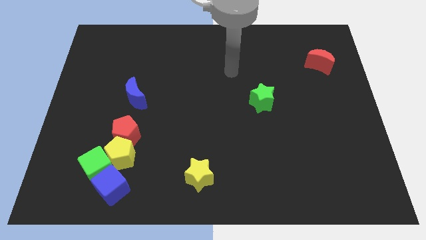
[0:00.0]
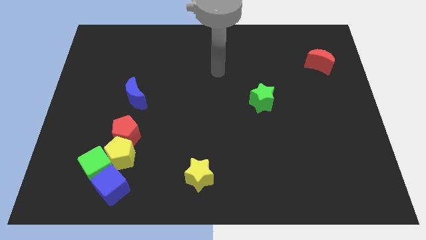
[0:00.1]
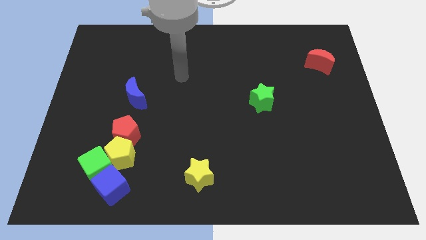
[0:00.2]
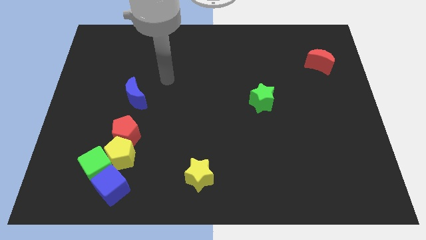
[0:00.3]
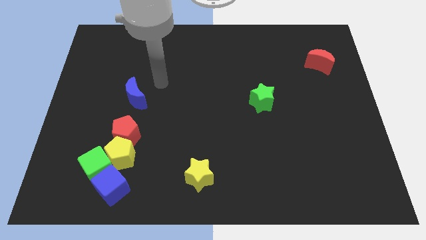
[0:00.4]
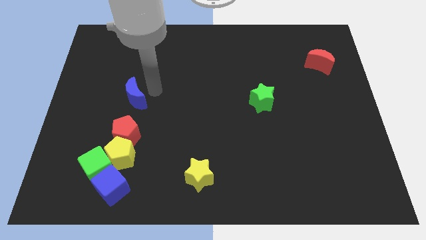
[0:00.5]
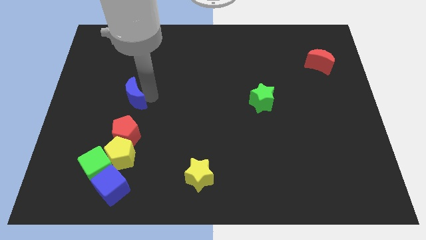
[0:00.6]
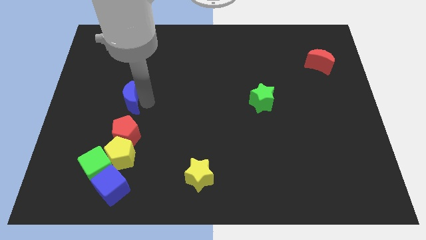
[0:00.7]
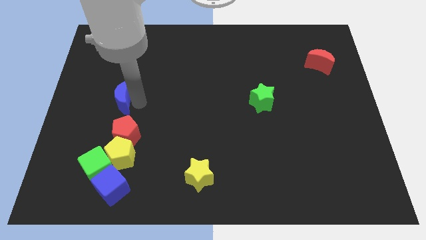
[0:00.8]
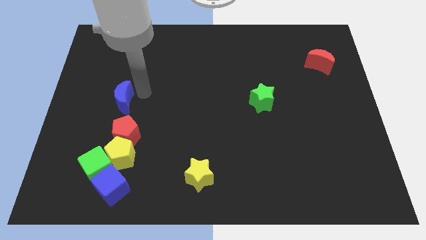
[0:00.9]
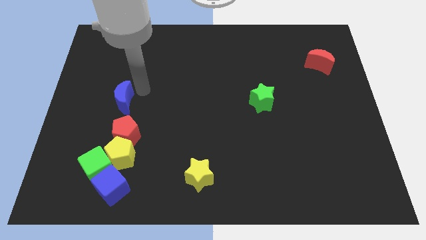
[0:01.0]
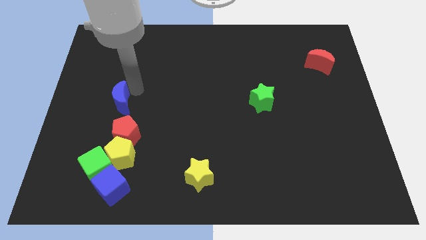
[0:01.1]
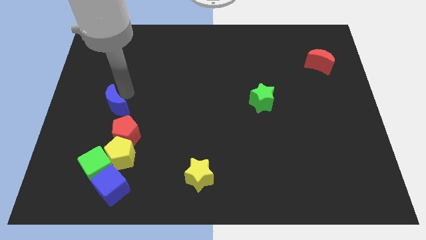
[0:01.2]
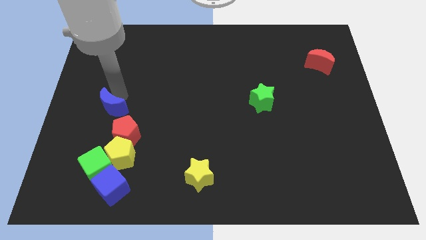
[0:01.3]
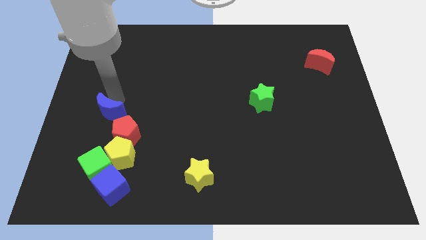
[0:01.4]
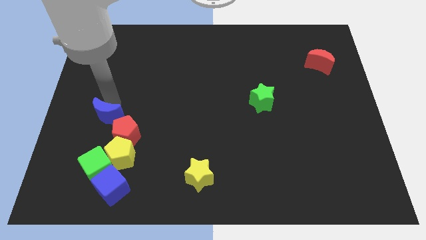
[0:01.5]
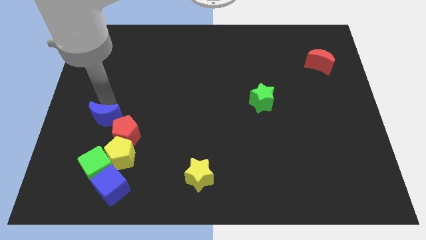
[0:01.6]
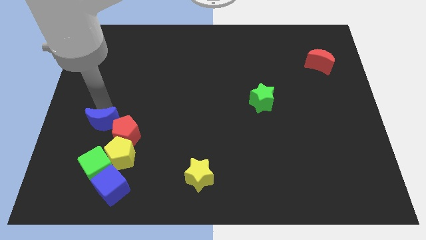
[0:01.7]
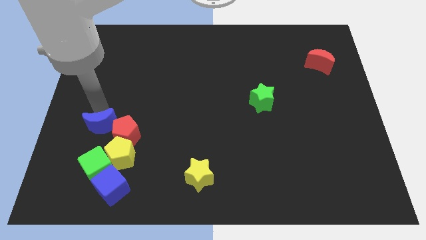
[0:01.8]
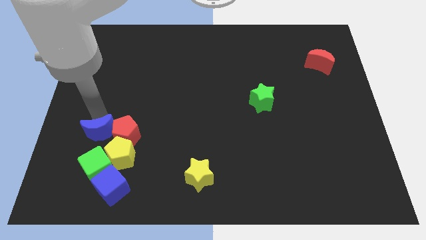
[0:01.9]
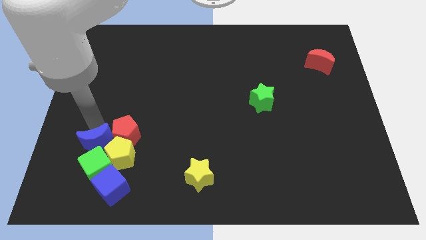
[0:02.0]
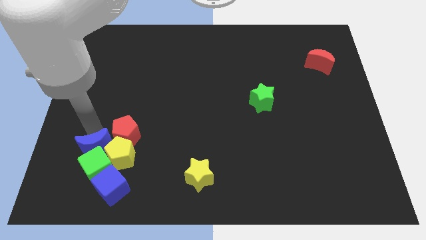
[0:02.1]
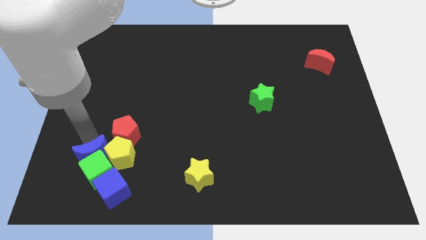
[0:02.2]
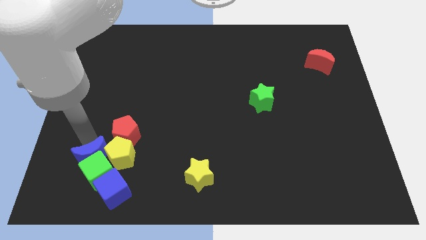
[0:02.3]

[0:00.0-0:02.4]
push the blue moon close to the green cube

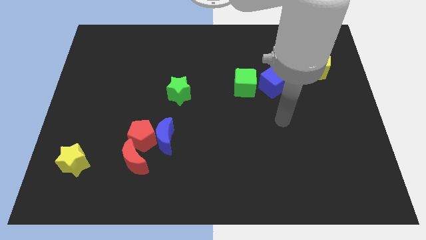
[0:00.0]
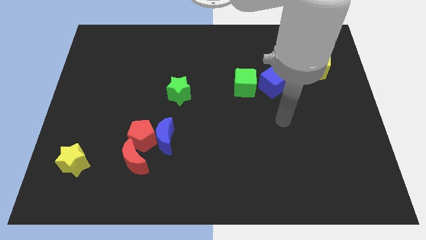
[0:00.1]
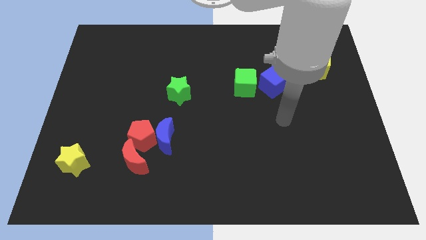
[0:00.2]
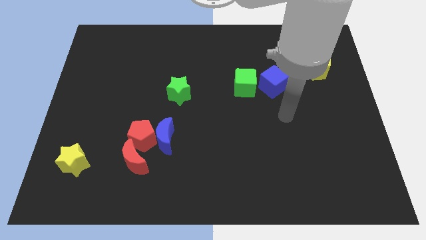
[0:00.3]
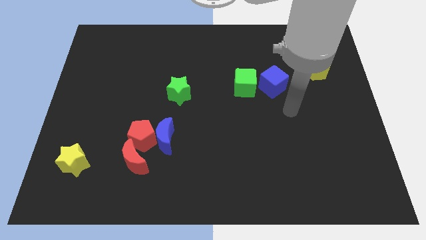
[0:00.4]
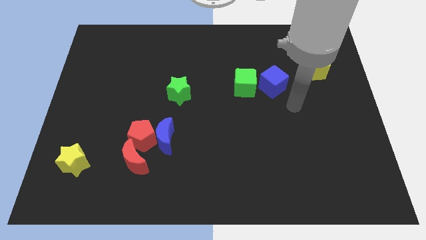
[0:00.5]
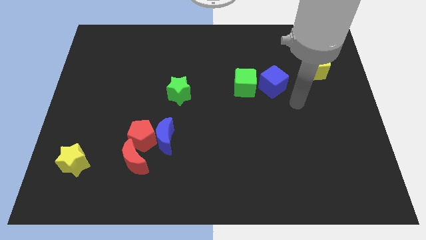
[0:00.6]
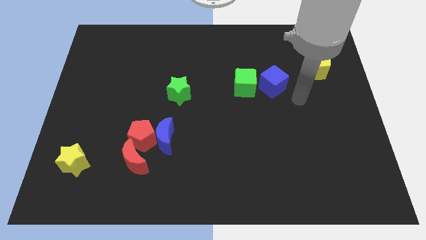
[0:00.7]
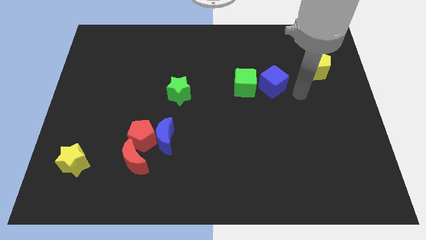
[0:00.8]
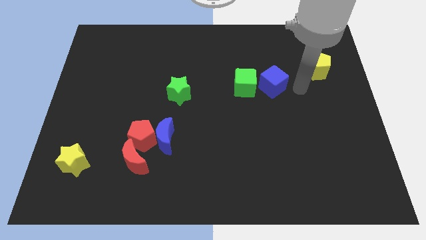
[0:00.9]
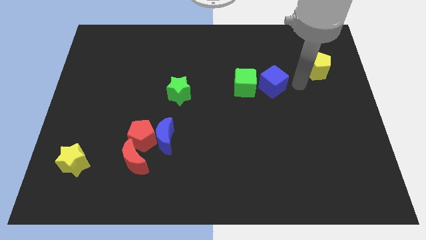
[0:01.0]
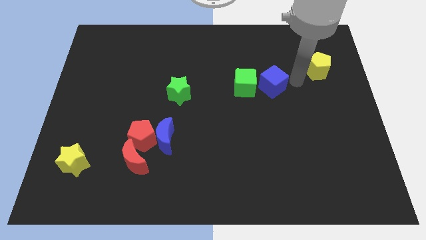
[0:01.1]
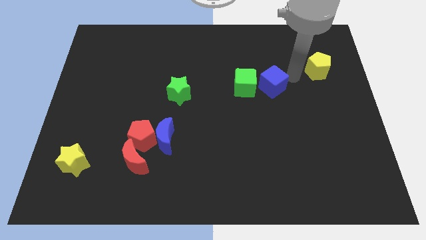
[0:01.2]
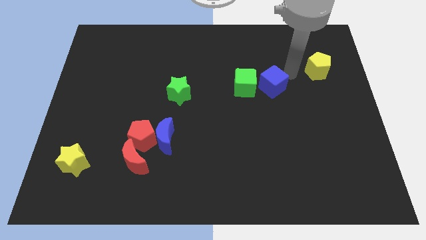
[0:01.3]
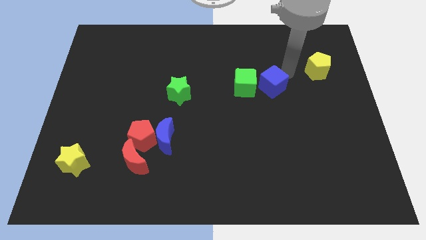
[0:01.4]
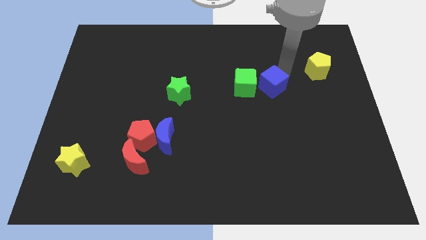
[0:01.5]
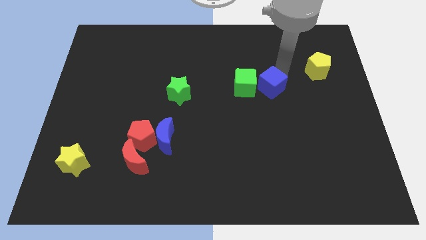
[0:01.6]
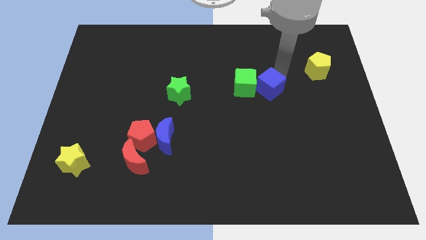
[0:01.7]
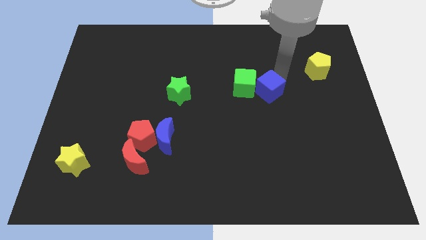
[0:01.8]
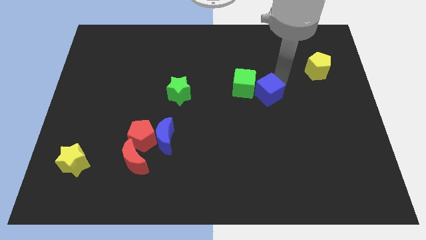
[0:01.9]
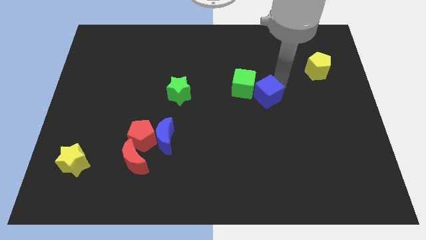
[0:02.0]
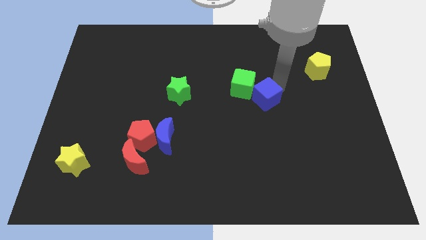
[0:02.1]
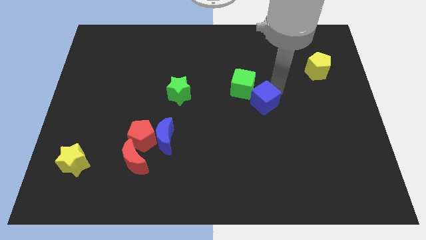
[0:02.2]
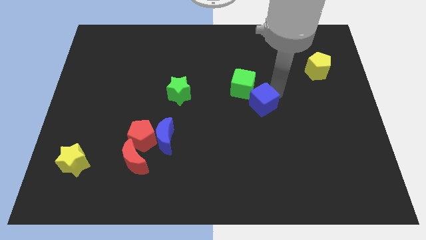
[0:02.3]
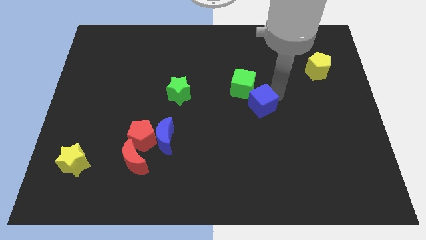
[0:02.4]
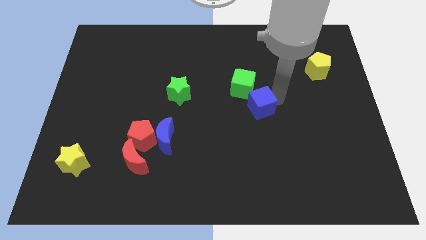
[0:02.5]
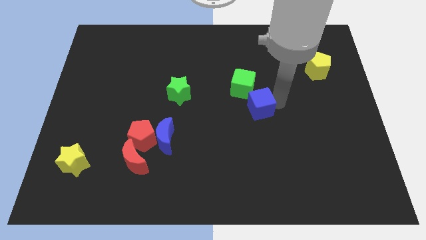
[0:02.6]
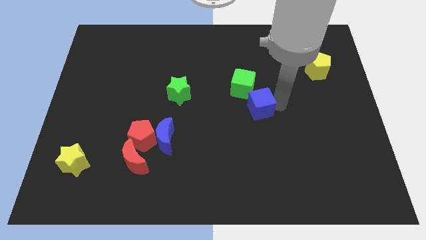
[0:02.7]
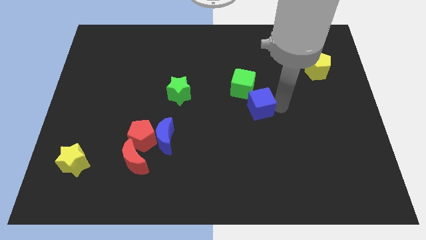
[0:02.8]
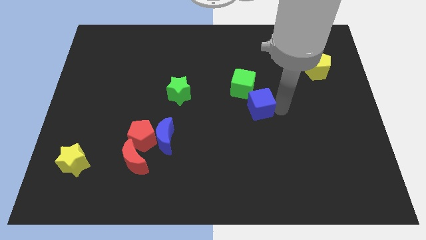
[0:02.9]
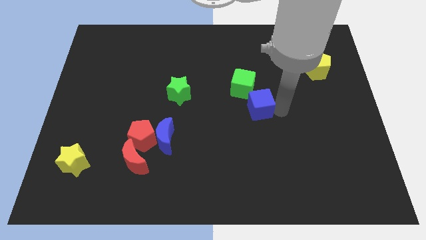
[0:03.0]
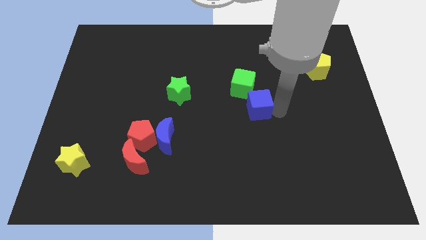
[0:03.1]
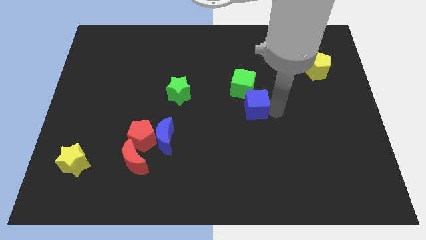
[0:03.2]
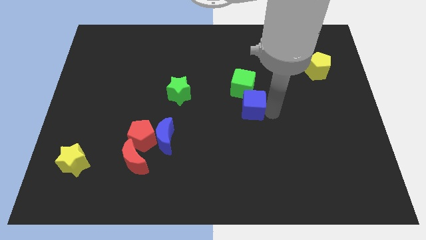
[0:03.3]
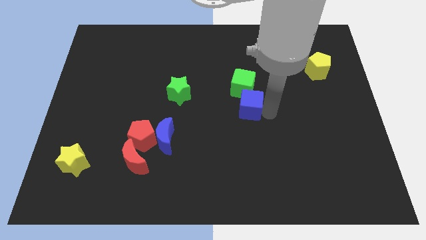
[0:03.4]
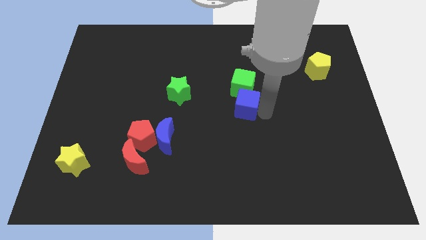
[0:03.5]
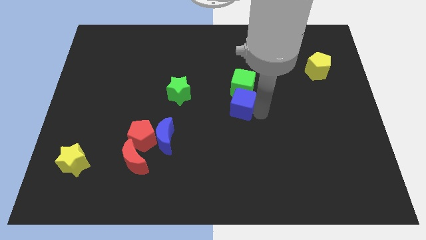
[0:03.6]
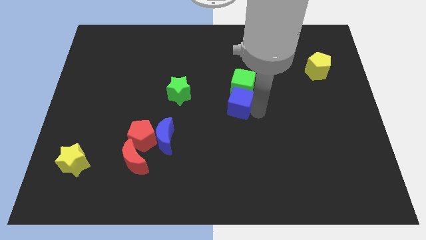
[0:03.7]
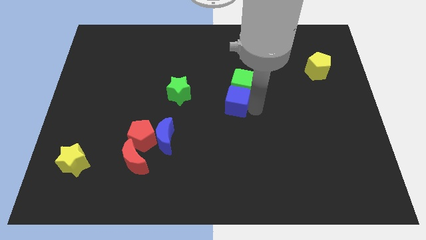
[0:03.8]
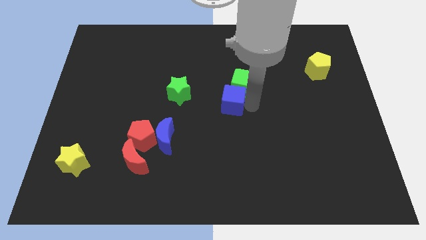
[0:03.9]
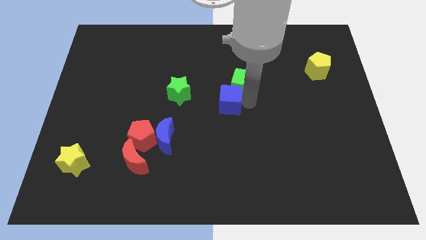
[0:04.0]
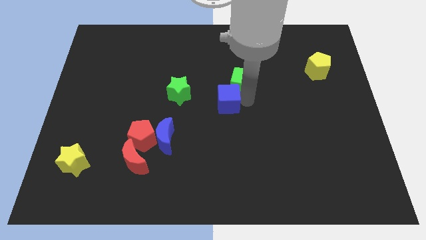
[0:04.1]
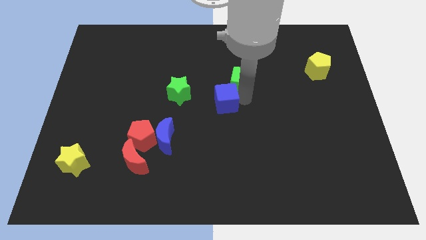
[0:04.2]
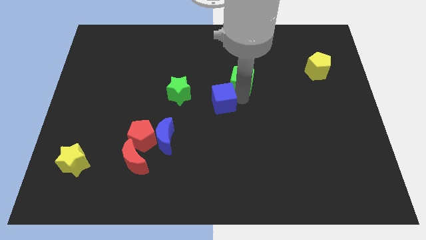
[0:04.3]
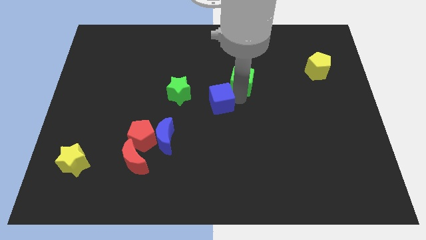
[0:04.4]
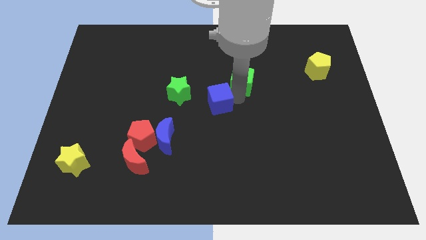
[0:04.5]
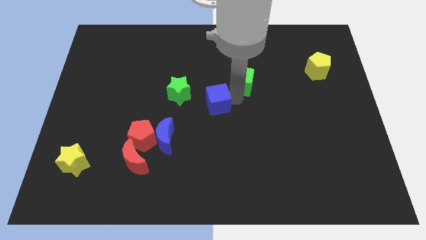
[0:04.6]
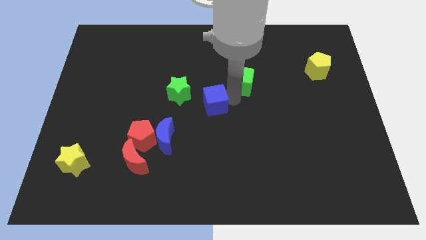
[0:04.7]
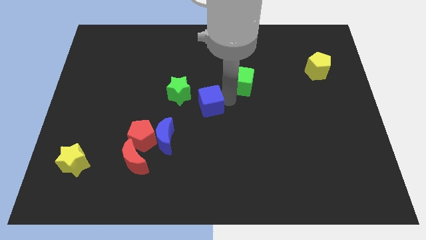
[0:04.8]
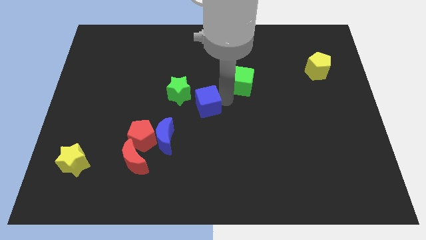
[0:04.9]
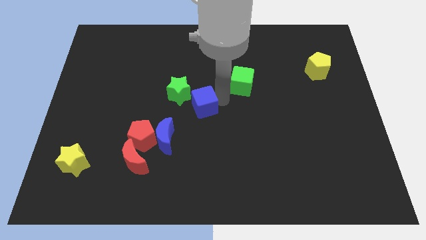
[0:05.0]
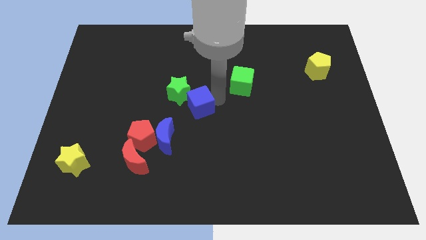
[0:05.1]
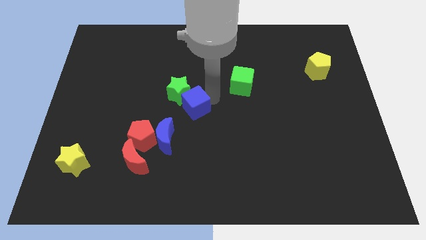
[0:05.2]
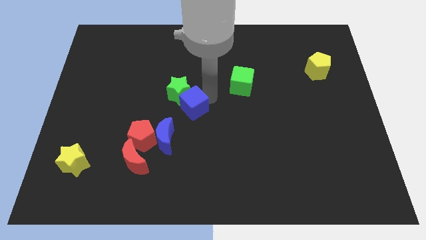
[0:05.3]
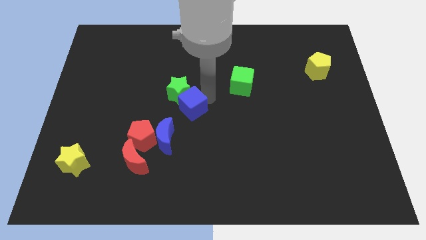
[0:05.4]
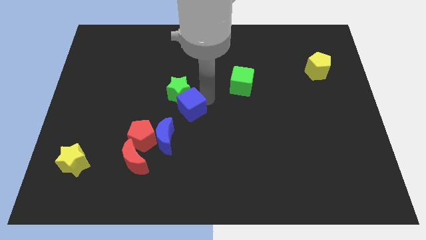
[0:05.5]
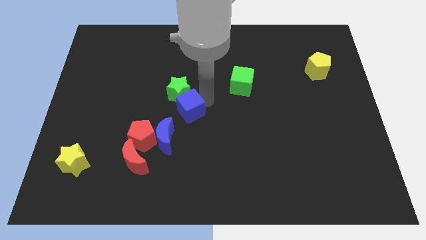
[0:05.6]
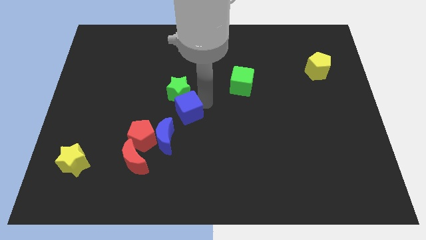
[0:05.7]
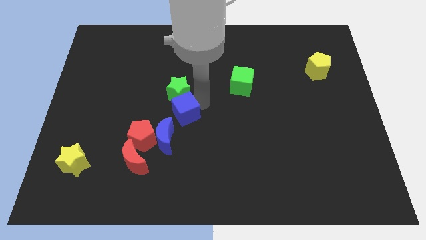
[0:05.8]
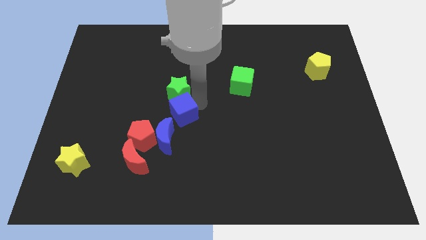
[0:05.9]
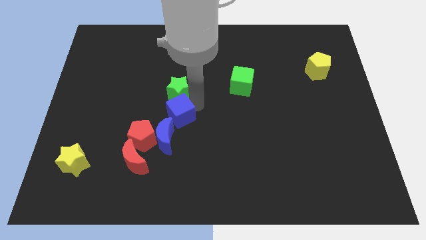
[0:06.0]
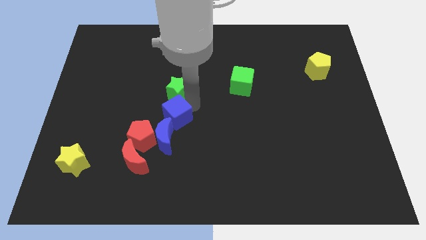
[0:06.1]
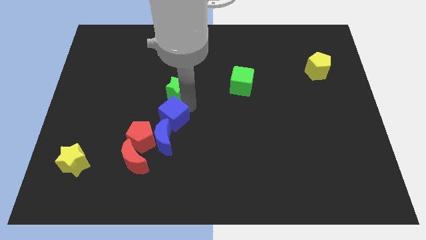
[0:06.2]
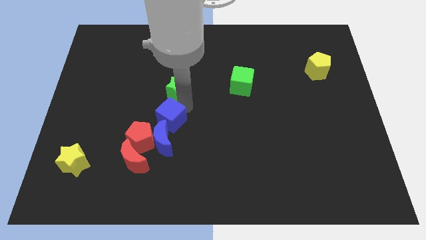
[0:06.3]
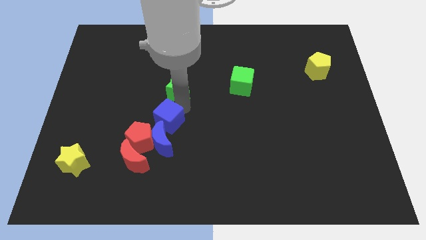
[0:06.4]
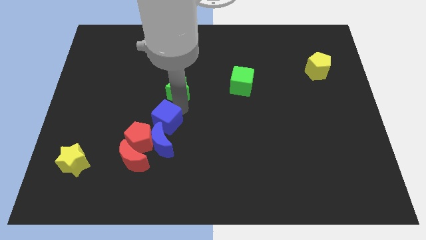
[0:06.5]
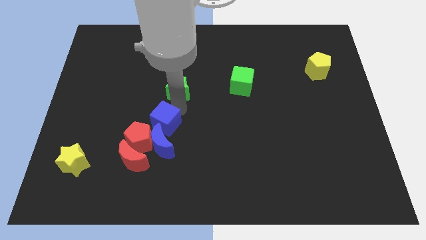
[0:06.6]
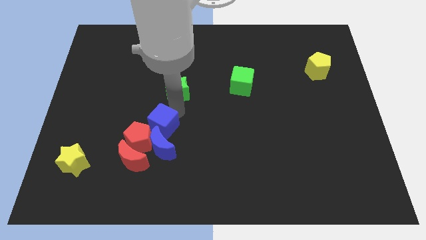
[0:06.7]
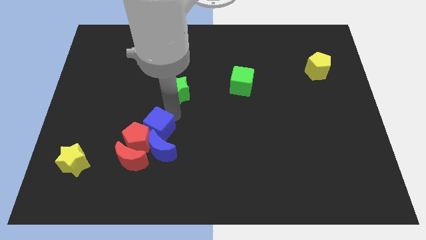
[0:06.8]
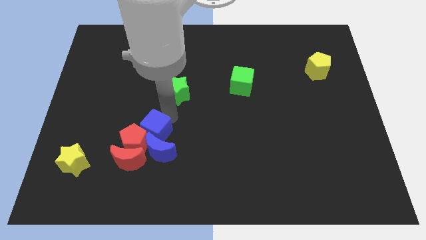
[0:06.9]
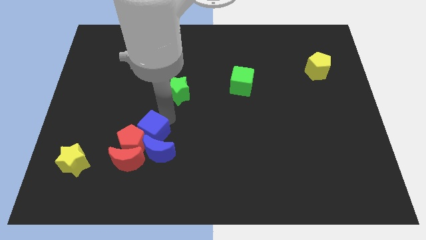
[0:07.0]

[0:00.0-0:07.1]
slide the blue cube close to the red pentagon
